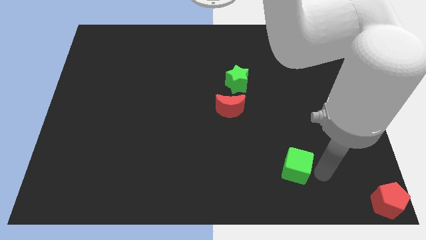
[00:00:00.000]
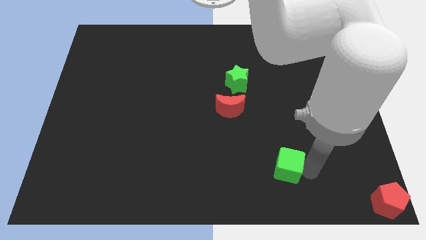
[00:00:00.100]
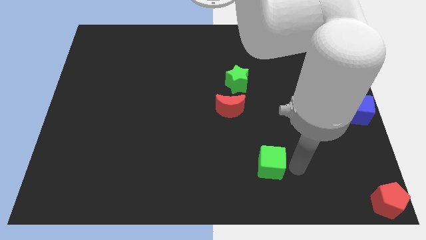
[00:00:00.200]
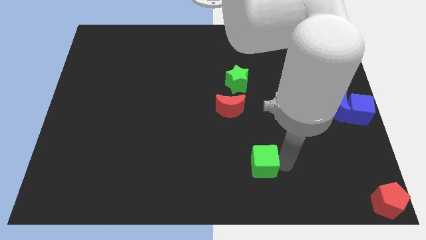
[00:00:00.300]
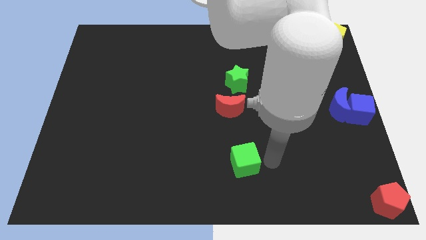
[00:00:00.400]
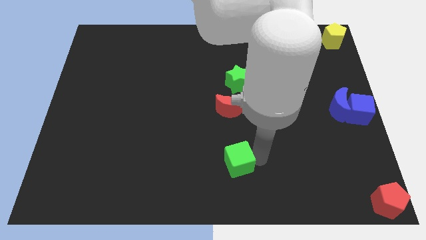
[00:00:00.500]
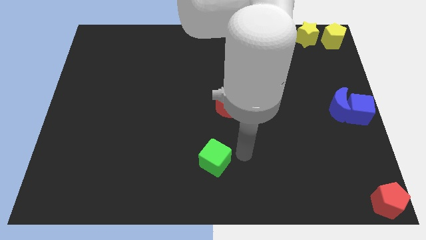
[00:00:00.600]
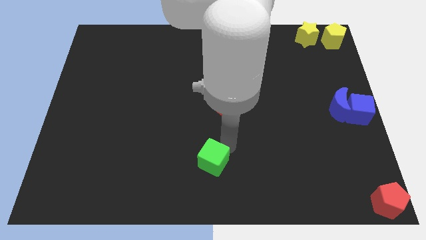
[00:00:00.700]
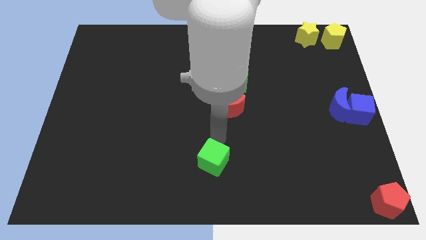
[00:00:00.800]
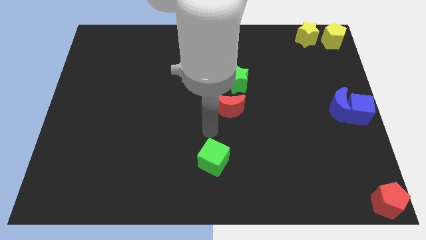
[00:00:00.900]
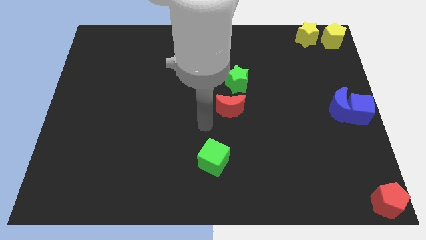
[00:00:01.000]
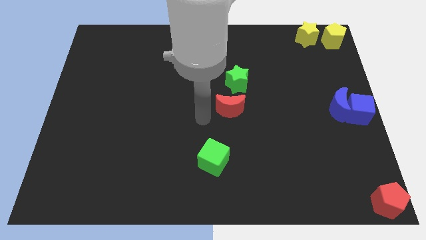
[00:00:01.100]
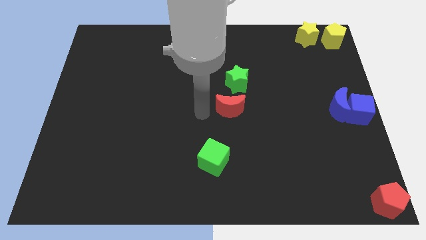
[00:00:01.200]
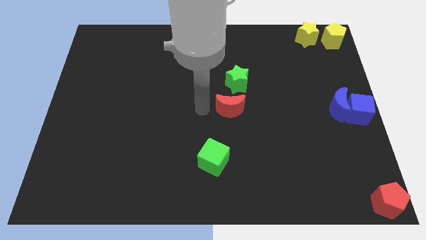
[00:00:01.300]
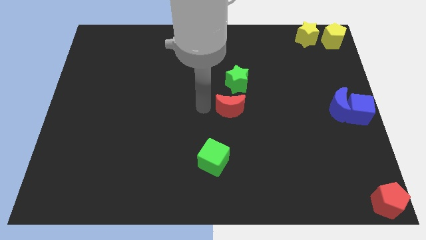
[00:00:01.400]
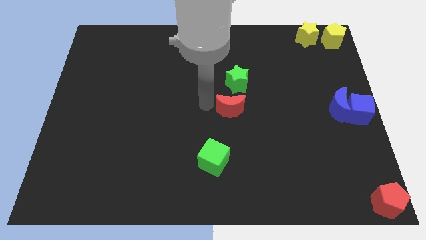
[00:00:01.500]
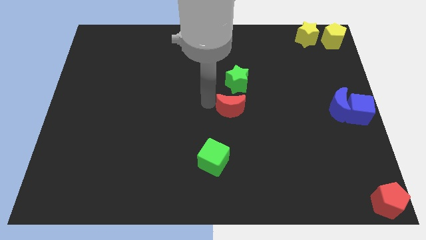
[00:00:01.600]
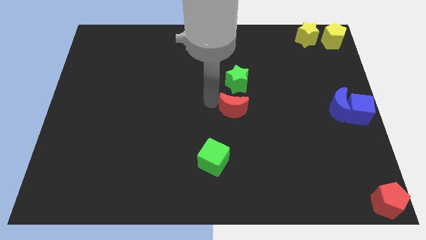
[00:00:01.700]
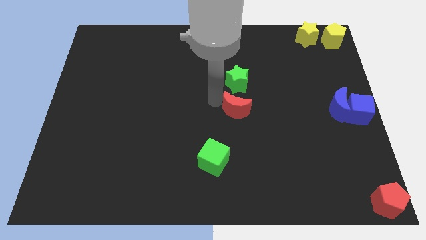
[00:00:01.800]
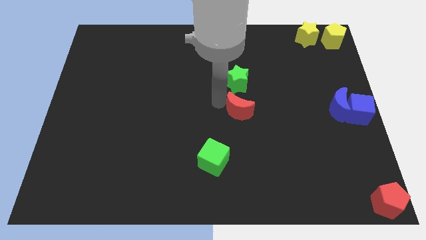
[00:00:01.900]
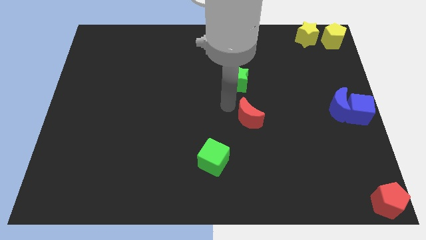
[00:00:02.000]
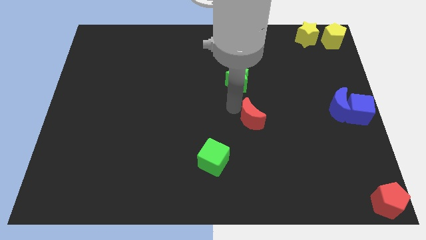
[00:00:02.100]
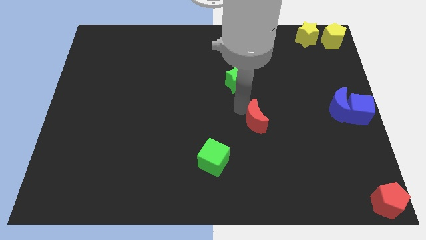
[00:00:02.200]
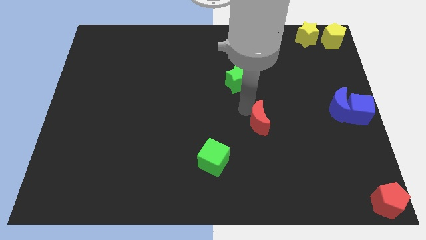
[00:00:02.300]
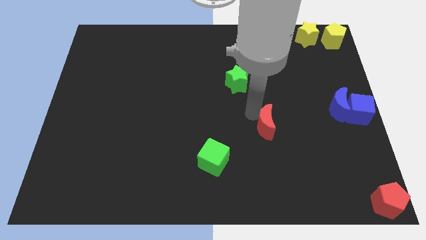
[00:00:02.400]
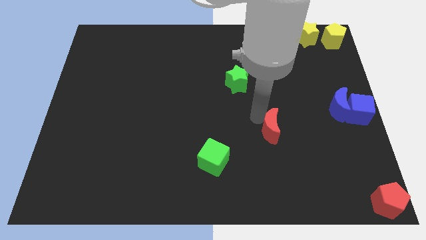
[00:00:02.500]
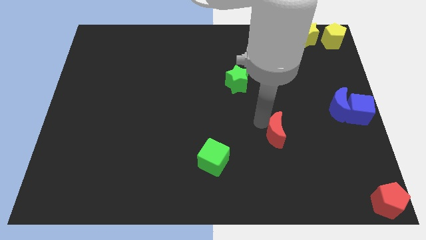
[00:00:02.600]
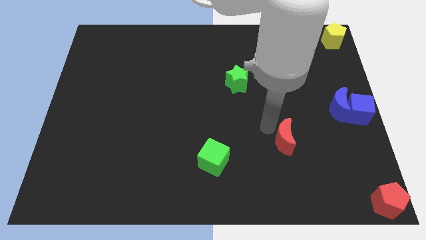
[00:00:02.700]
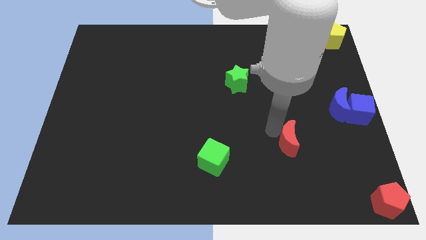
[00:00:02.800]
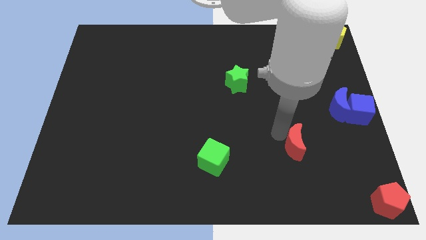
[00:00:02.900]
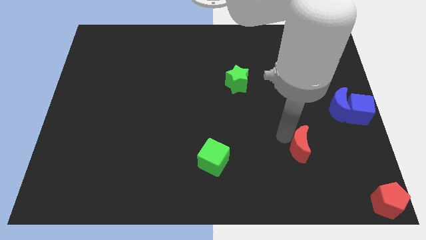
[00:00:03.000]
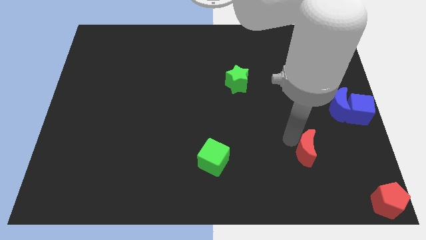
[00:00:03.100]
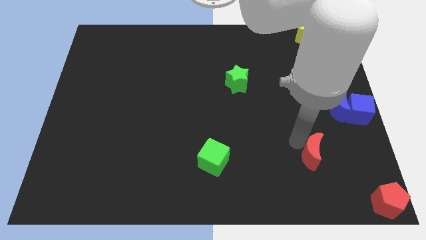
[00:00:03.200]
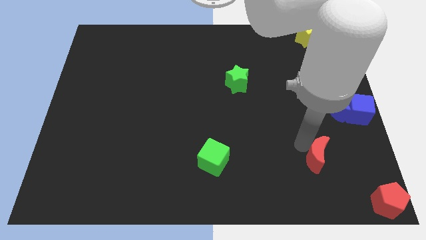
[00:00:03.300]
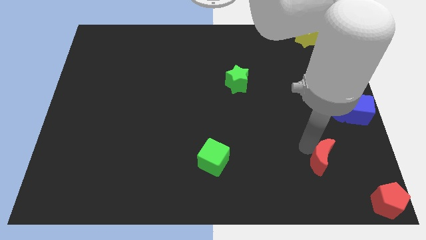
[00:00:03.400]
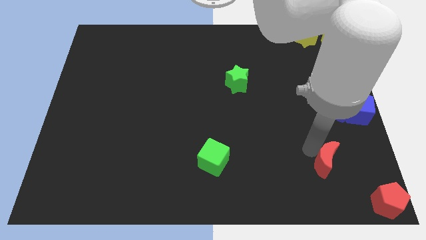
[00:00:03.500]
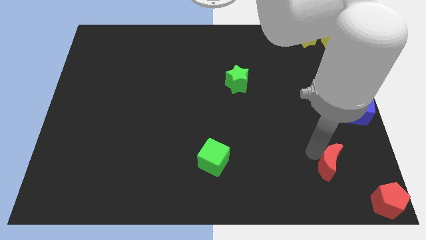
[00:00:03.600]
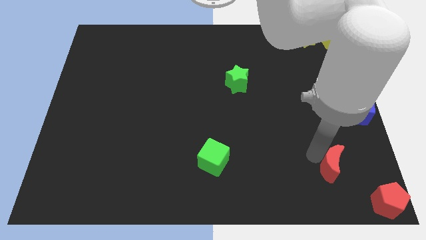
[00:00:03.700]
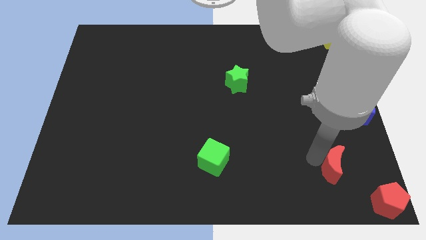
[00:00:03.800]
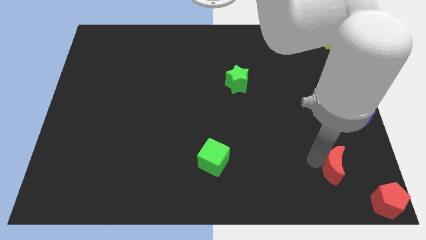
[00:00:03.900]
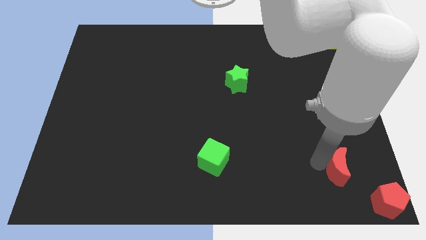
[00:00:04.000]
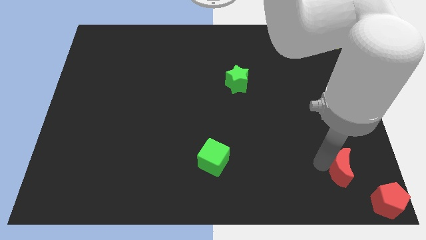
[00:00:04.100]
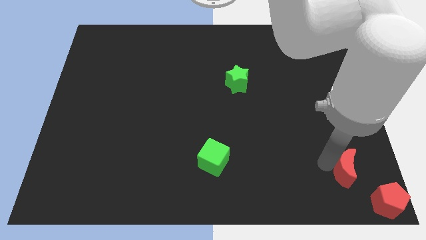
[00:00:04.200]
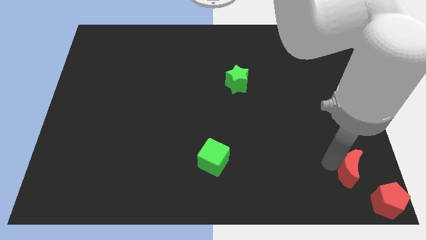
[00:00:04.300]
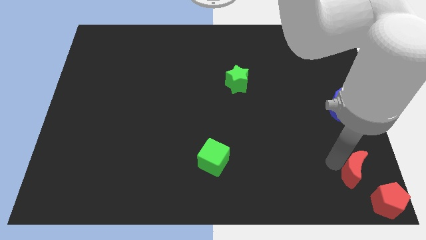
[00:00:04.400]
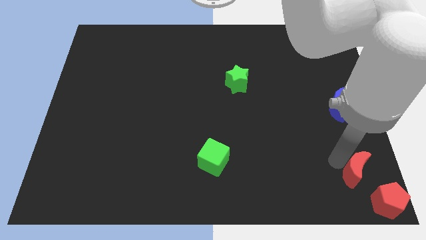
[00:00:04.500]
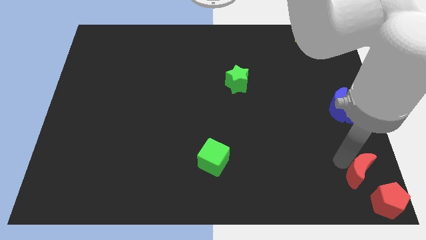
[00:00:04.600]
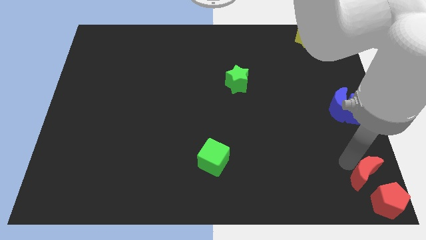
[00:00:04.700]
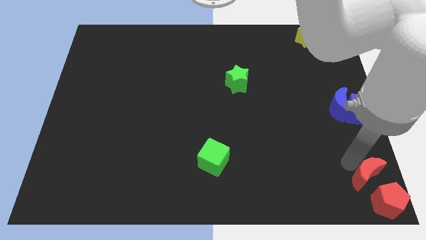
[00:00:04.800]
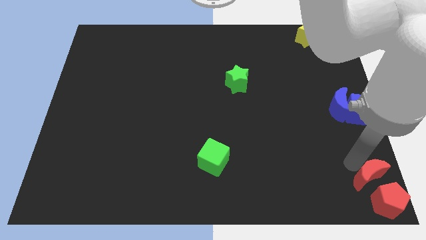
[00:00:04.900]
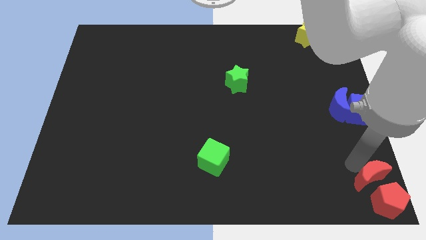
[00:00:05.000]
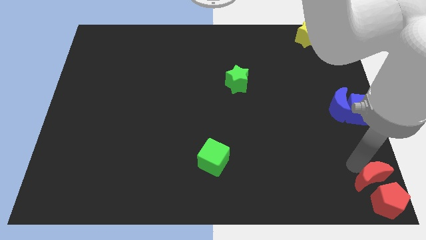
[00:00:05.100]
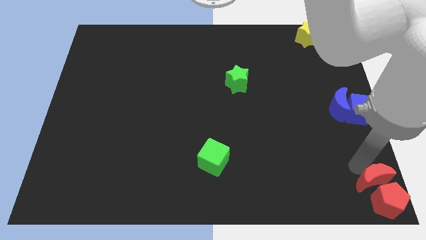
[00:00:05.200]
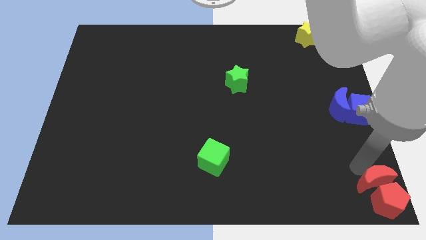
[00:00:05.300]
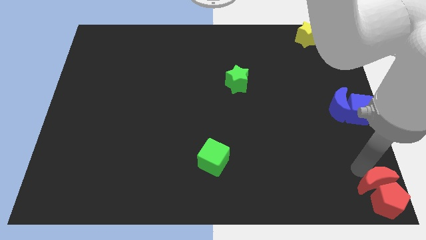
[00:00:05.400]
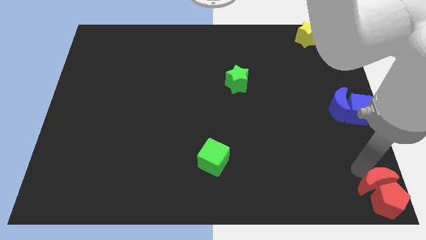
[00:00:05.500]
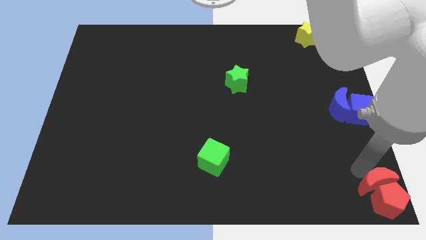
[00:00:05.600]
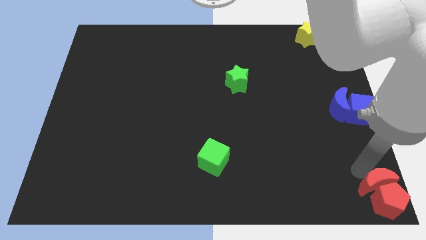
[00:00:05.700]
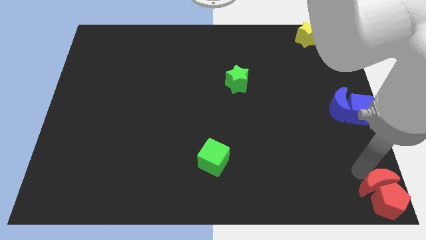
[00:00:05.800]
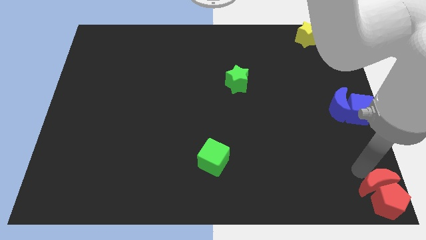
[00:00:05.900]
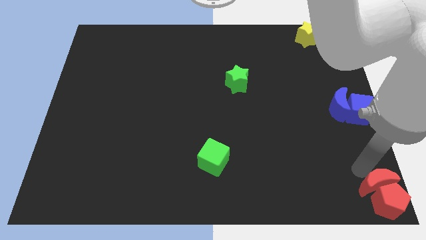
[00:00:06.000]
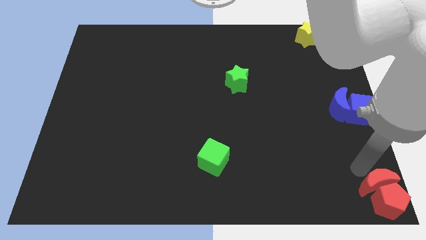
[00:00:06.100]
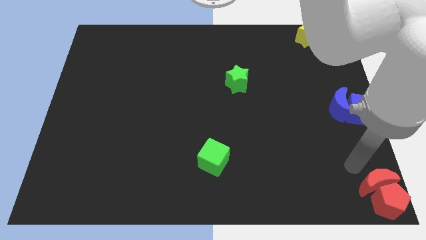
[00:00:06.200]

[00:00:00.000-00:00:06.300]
slide red crescent into red pentagon

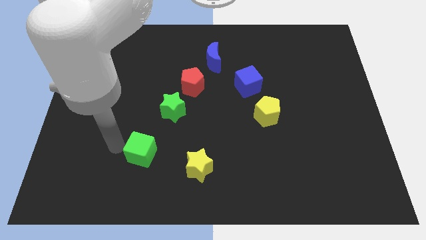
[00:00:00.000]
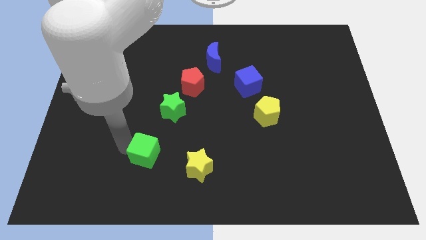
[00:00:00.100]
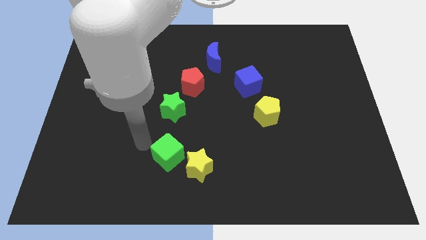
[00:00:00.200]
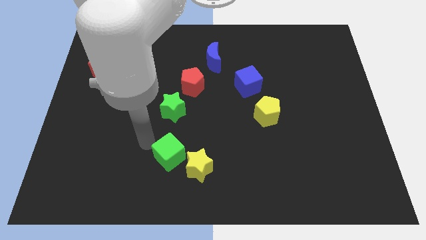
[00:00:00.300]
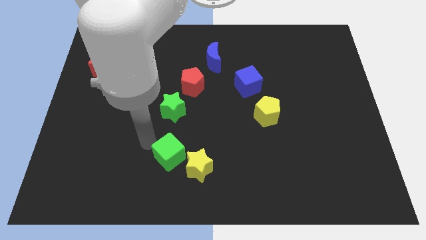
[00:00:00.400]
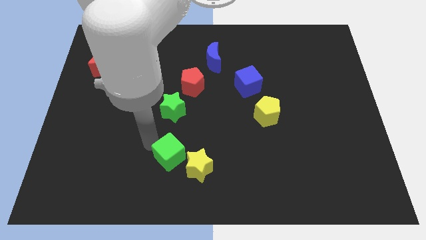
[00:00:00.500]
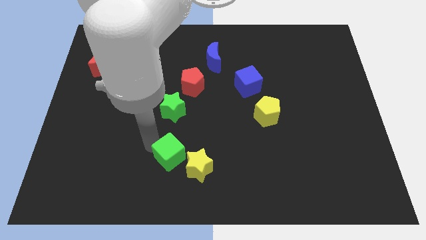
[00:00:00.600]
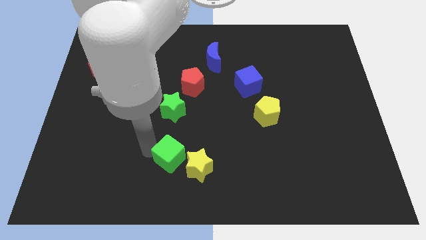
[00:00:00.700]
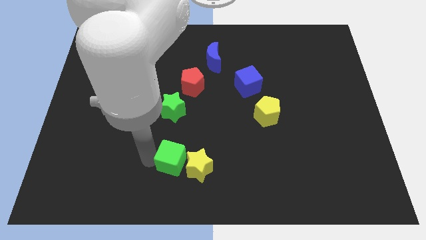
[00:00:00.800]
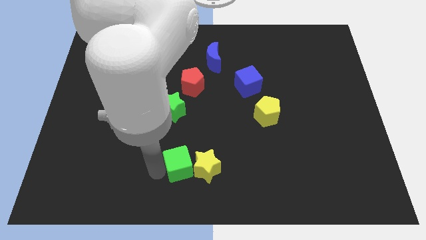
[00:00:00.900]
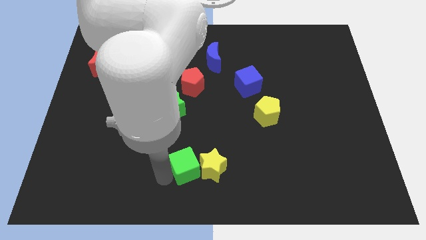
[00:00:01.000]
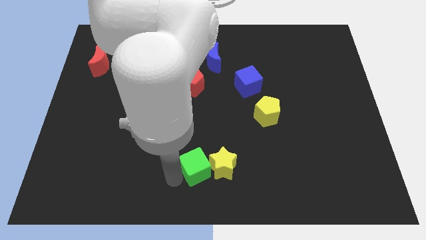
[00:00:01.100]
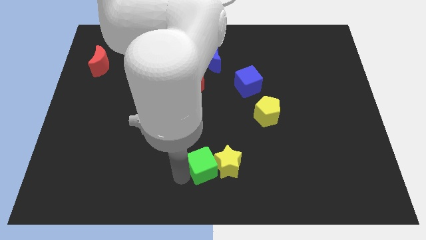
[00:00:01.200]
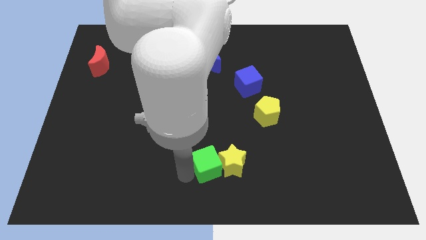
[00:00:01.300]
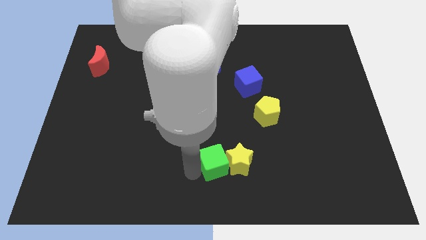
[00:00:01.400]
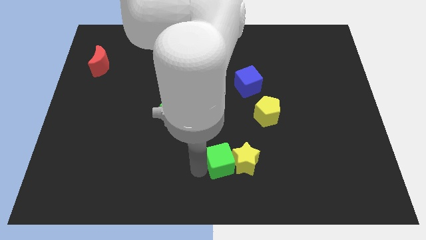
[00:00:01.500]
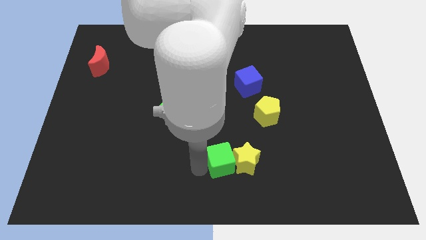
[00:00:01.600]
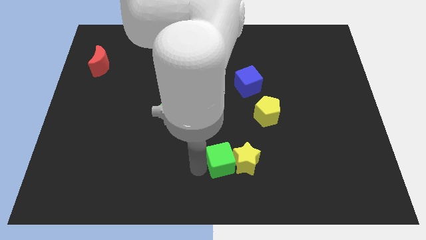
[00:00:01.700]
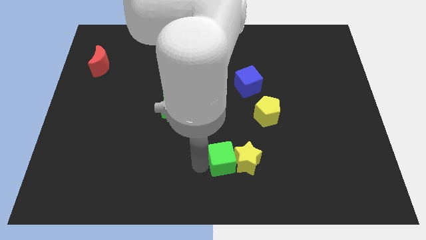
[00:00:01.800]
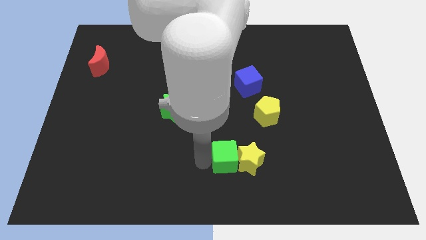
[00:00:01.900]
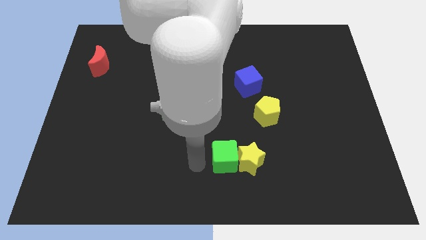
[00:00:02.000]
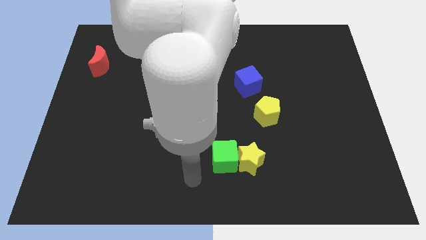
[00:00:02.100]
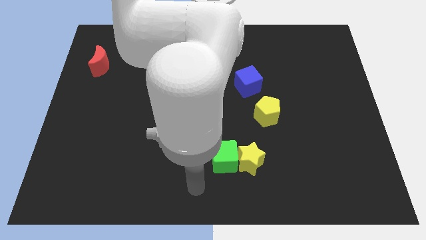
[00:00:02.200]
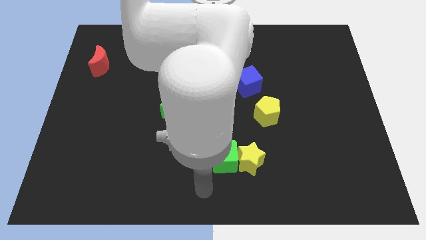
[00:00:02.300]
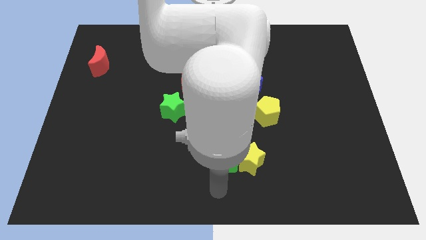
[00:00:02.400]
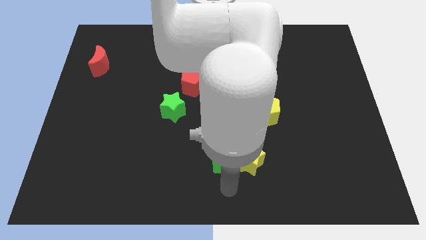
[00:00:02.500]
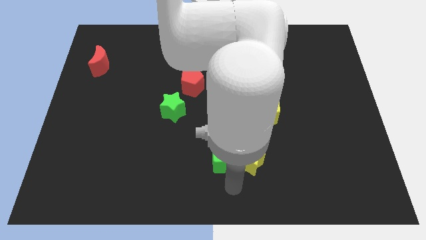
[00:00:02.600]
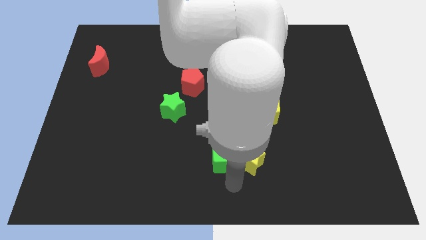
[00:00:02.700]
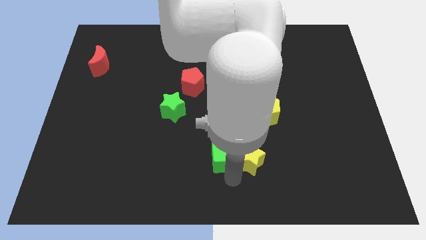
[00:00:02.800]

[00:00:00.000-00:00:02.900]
push the green cube to the right
